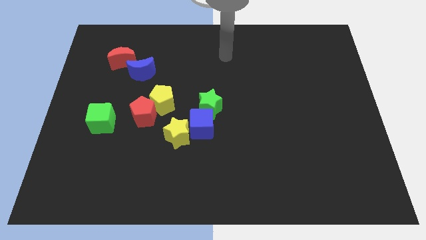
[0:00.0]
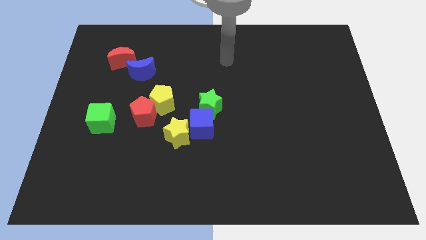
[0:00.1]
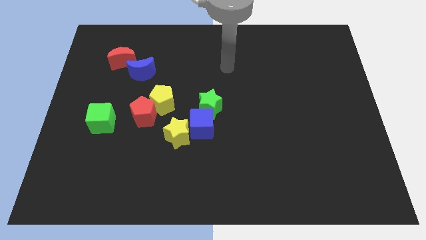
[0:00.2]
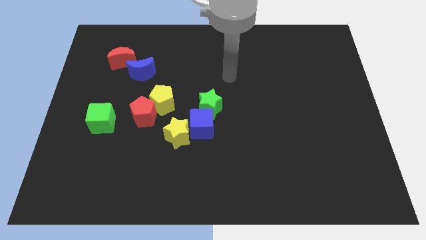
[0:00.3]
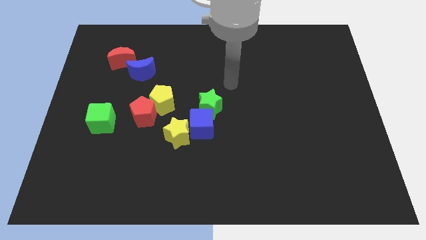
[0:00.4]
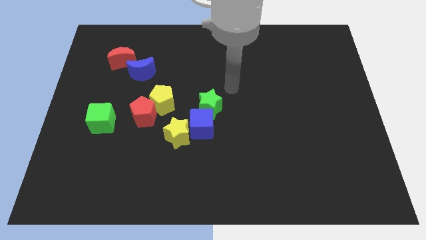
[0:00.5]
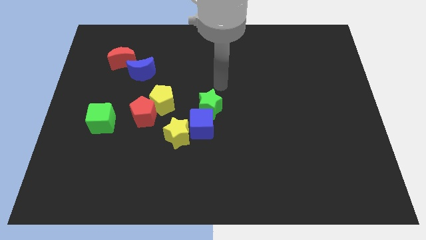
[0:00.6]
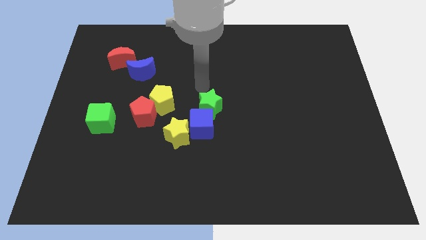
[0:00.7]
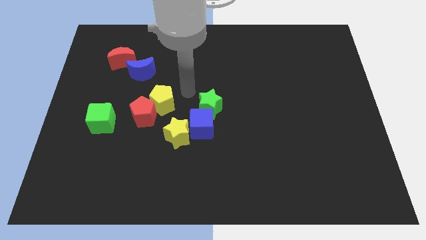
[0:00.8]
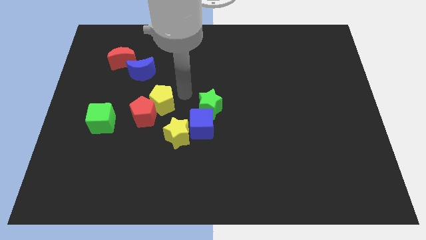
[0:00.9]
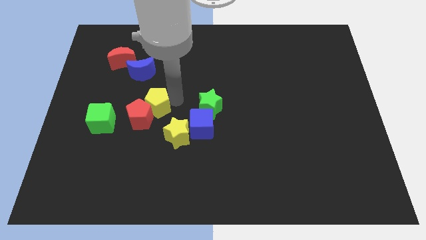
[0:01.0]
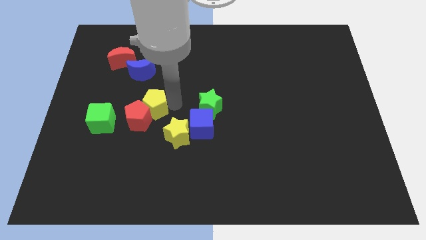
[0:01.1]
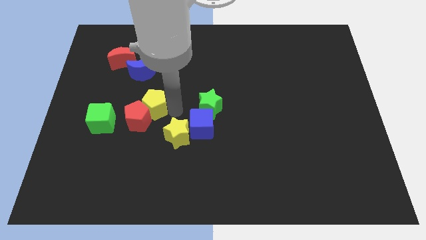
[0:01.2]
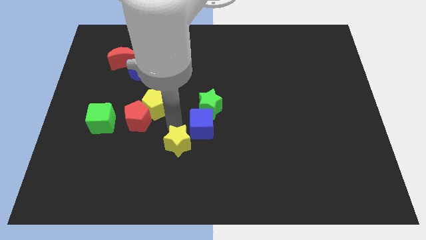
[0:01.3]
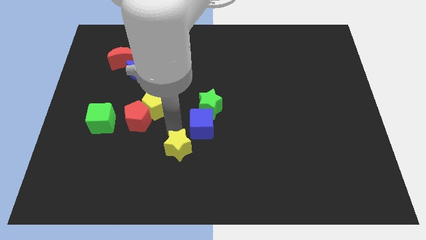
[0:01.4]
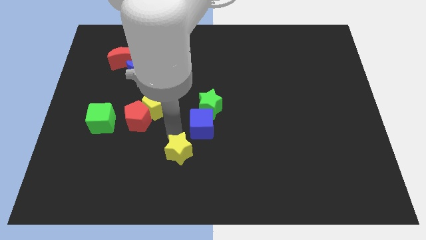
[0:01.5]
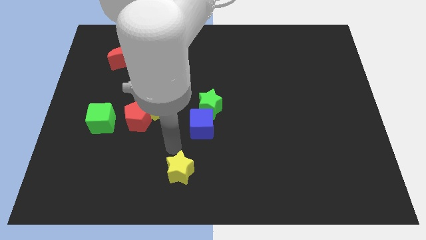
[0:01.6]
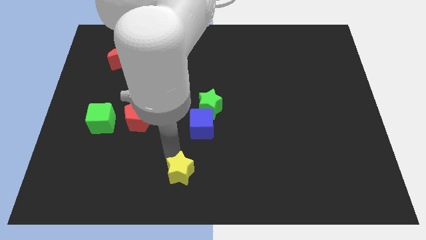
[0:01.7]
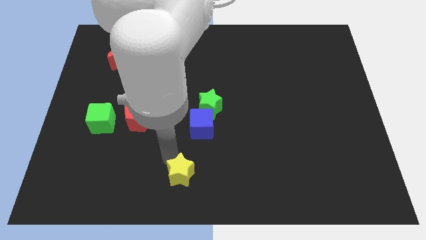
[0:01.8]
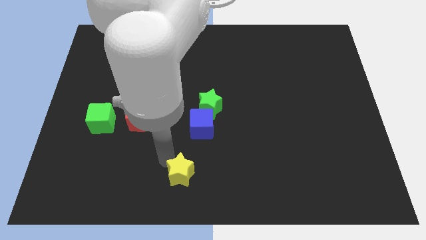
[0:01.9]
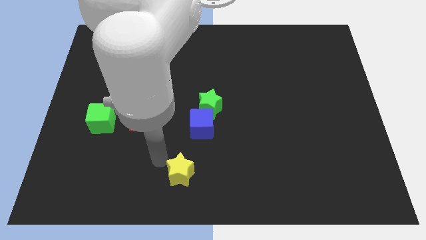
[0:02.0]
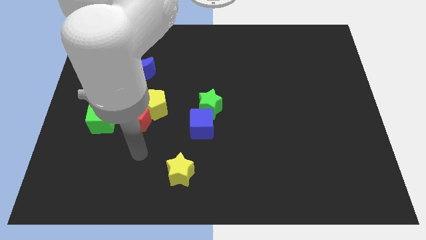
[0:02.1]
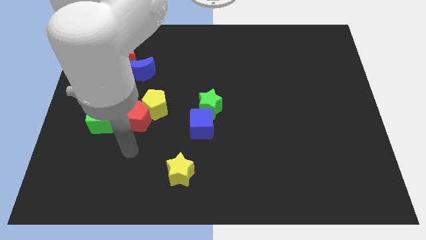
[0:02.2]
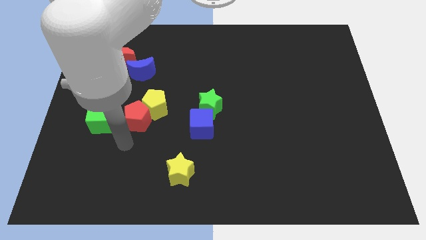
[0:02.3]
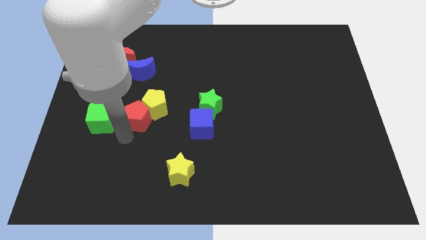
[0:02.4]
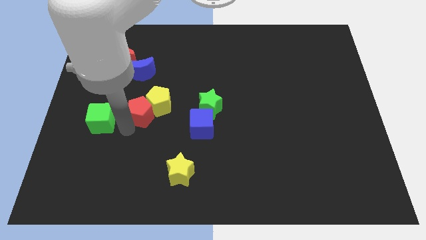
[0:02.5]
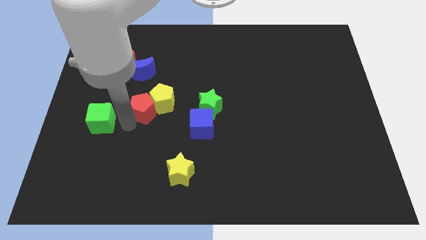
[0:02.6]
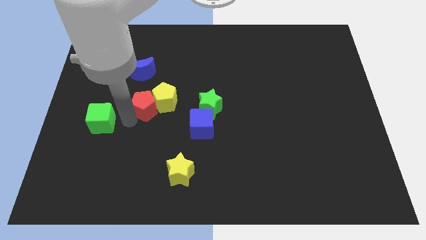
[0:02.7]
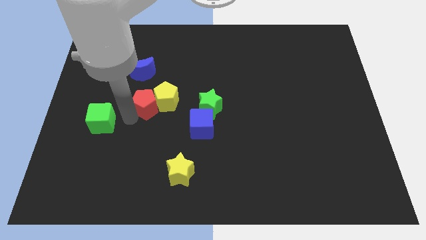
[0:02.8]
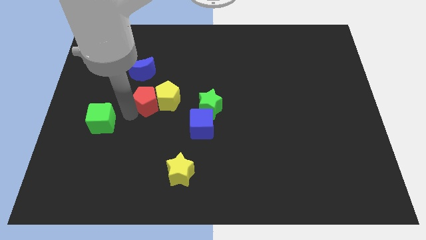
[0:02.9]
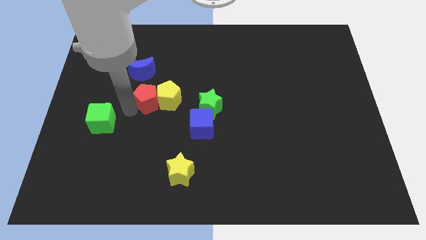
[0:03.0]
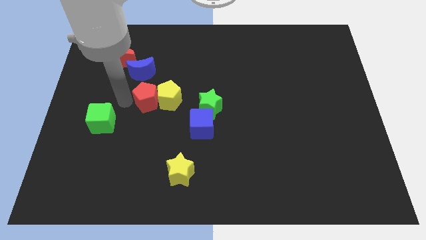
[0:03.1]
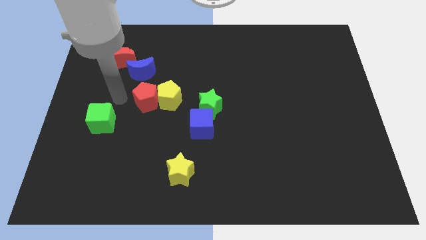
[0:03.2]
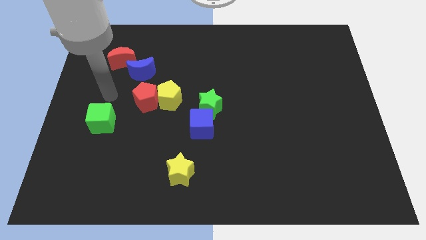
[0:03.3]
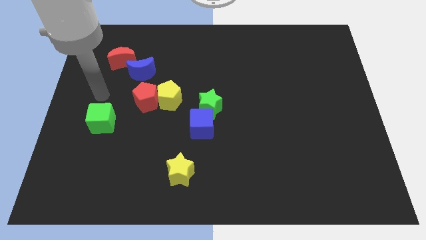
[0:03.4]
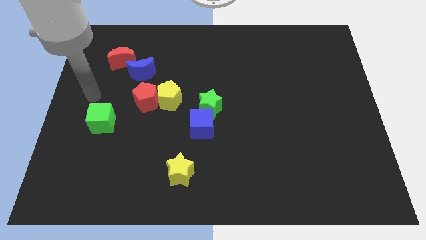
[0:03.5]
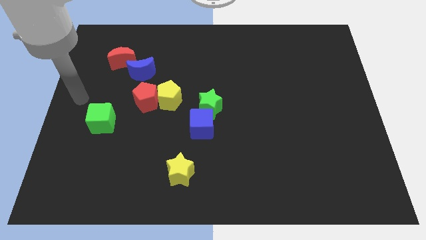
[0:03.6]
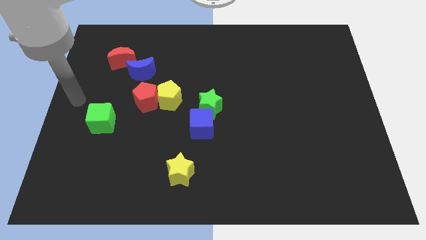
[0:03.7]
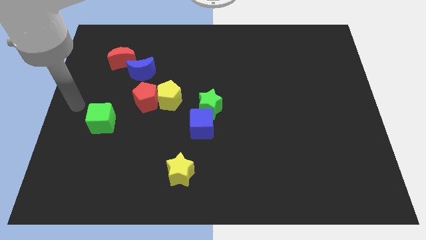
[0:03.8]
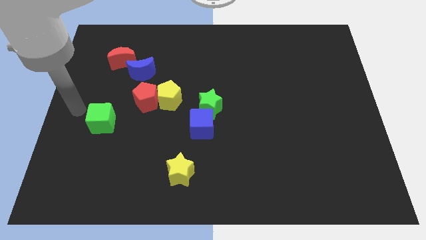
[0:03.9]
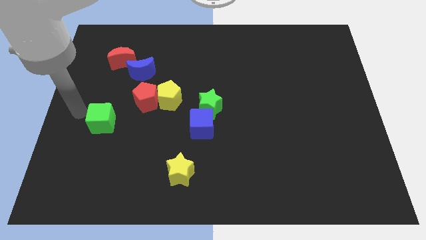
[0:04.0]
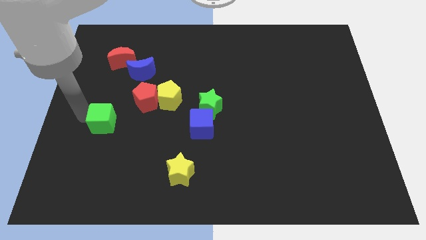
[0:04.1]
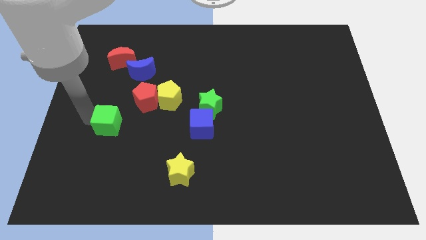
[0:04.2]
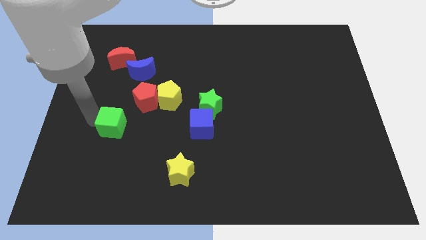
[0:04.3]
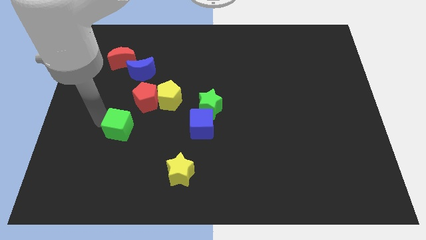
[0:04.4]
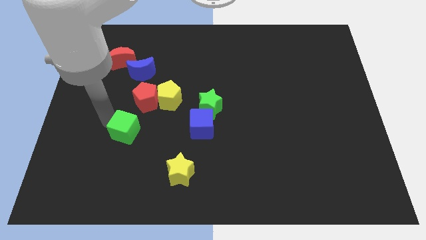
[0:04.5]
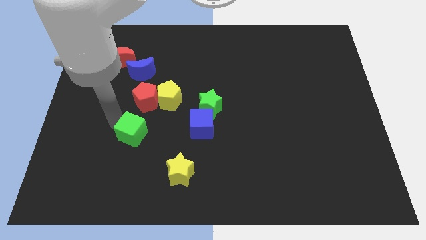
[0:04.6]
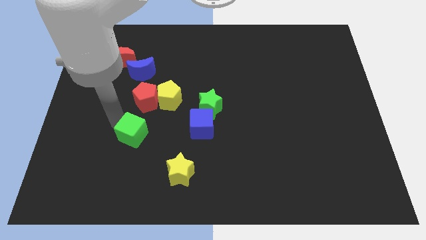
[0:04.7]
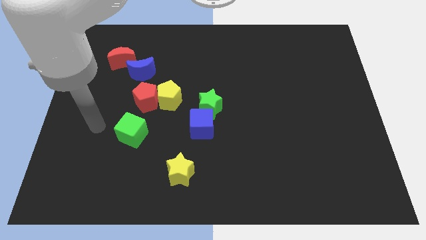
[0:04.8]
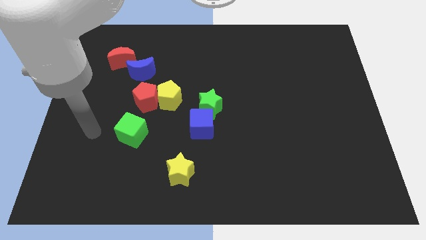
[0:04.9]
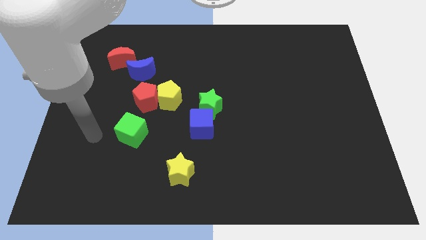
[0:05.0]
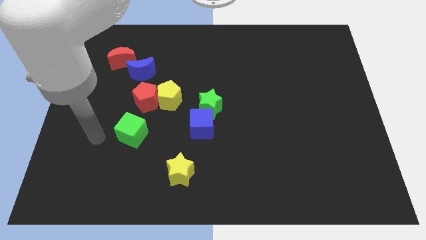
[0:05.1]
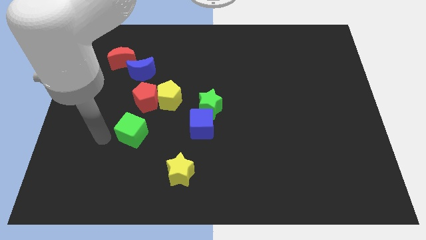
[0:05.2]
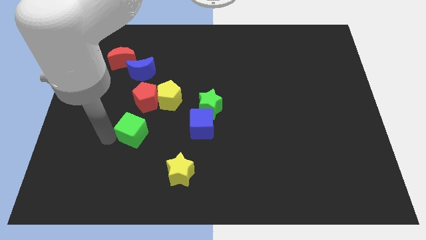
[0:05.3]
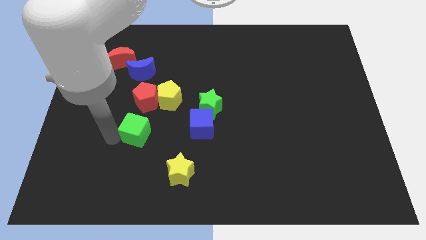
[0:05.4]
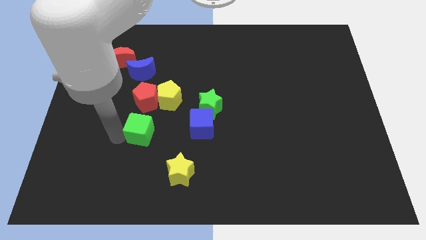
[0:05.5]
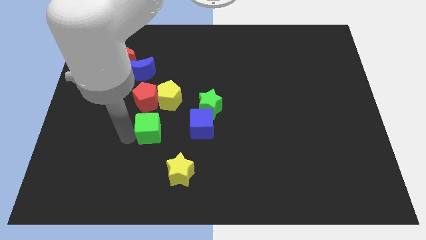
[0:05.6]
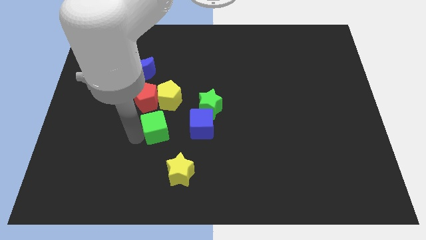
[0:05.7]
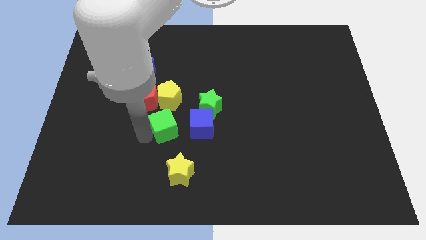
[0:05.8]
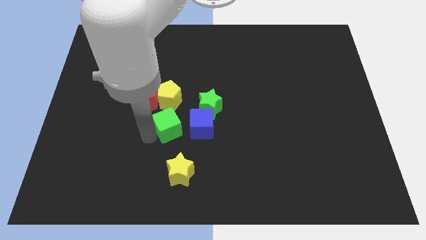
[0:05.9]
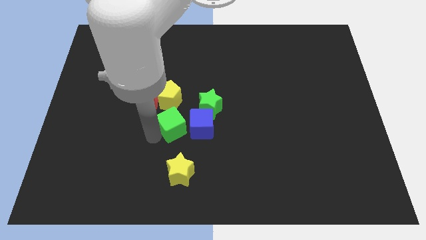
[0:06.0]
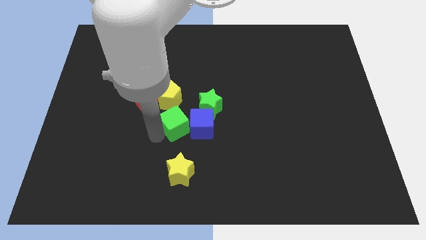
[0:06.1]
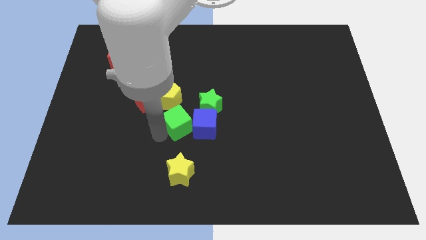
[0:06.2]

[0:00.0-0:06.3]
slide the green cube to the blue cube

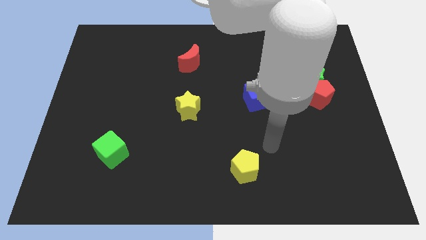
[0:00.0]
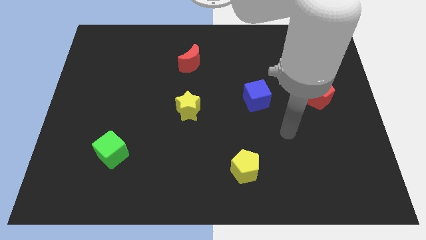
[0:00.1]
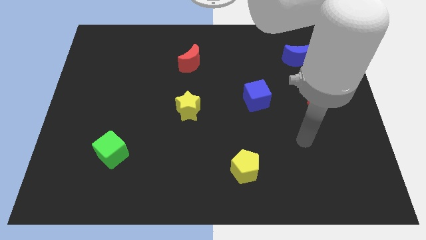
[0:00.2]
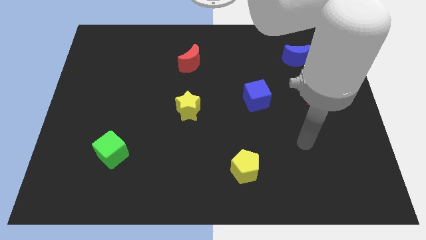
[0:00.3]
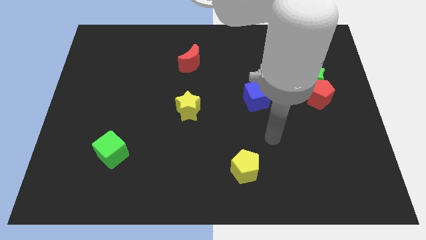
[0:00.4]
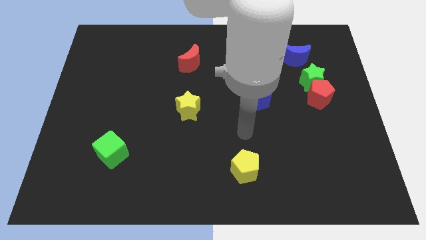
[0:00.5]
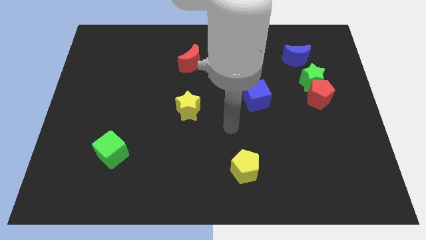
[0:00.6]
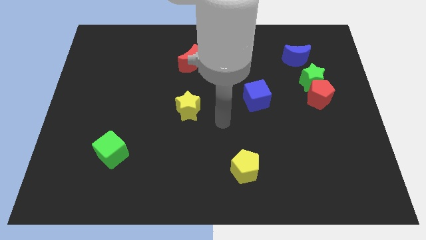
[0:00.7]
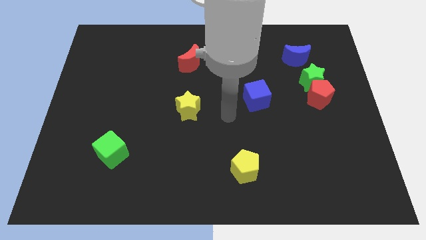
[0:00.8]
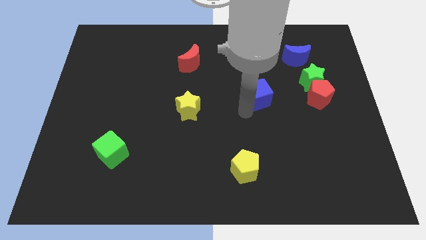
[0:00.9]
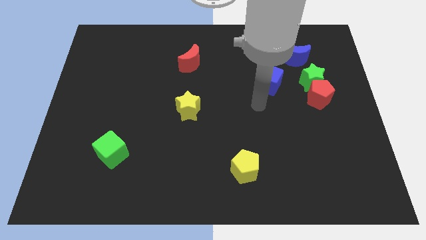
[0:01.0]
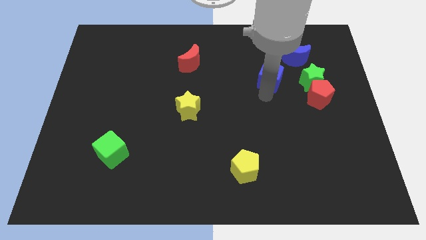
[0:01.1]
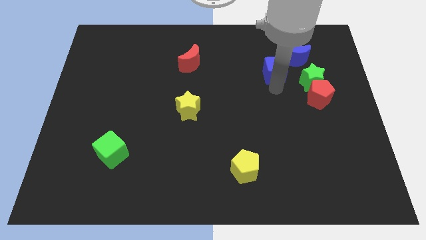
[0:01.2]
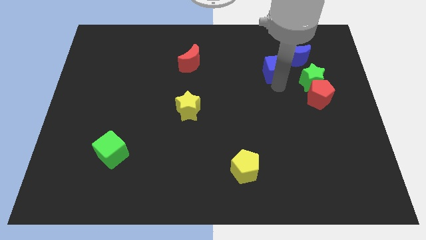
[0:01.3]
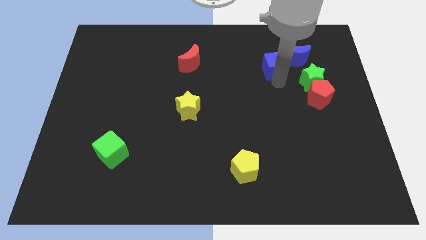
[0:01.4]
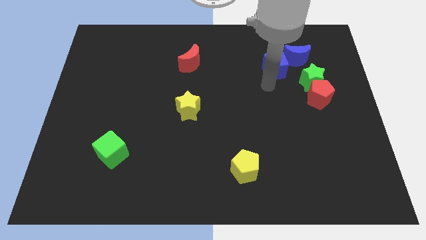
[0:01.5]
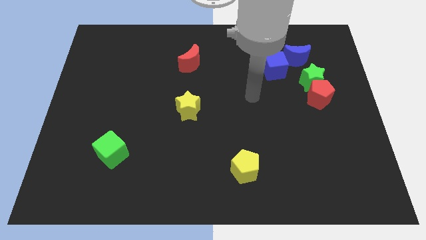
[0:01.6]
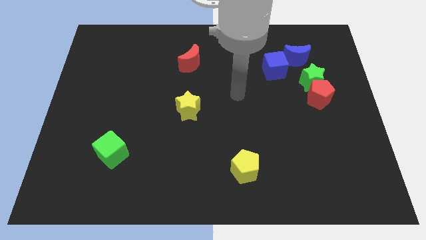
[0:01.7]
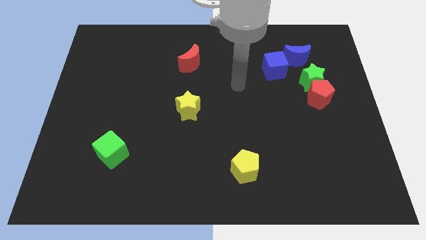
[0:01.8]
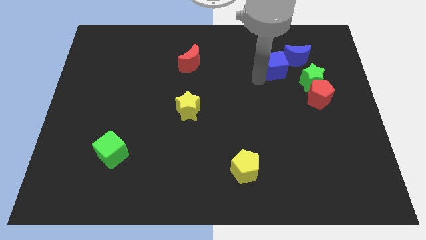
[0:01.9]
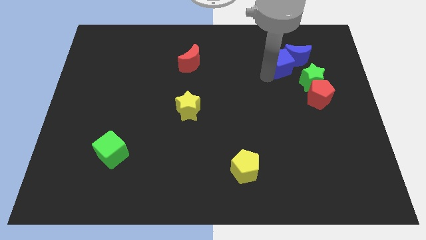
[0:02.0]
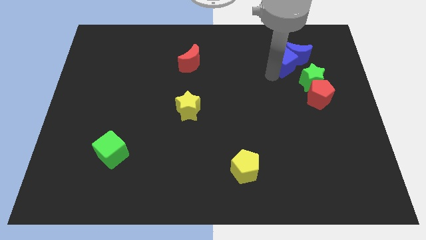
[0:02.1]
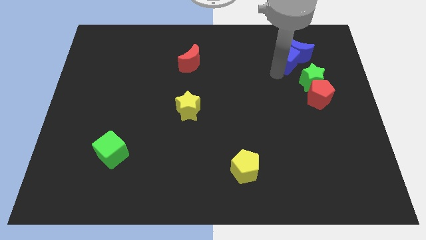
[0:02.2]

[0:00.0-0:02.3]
move the blue cube to the blue moon
